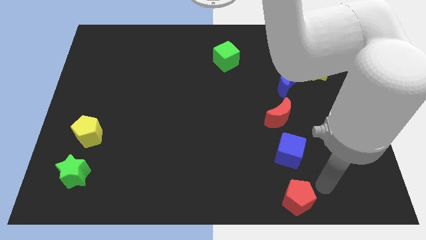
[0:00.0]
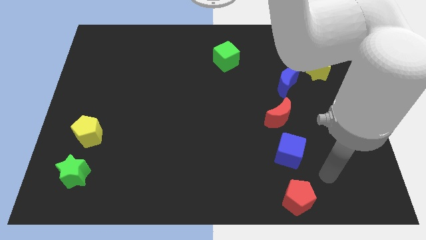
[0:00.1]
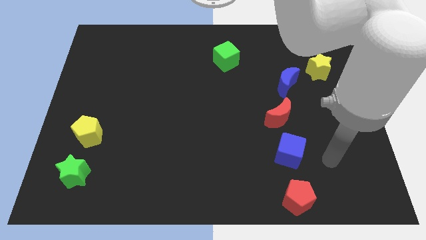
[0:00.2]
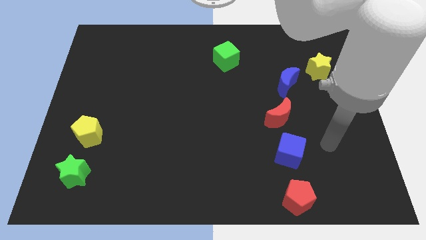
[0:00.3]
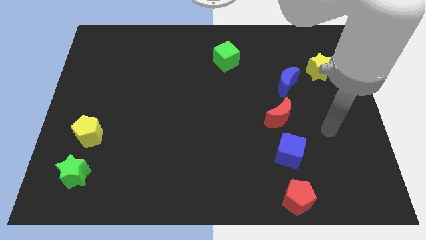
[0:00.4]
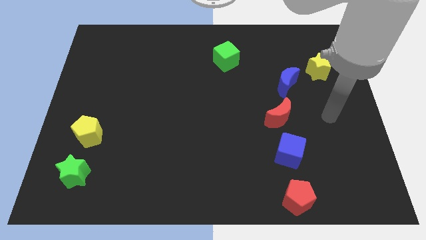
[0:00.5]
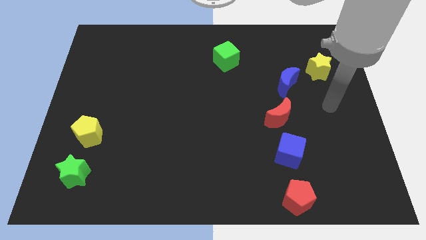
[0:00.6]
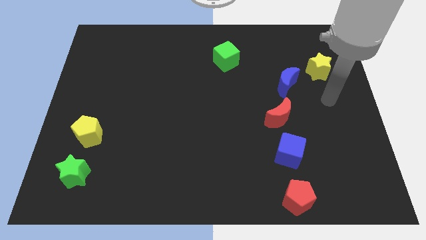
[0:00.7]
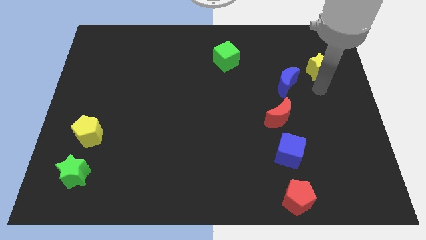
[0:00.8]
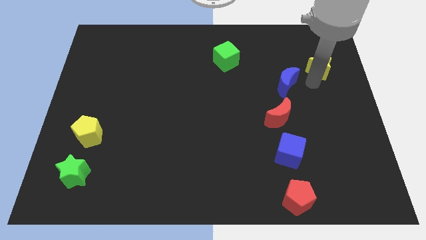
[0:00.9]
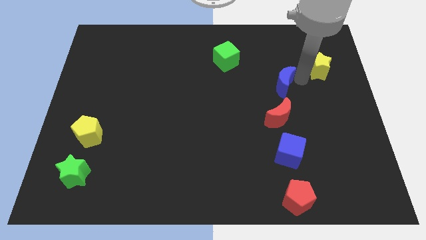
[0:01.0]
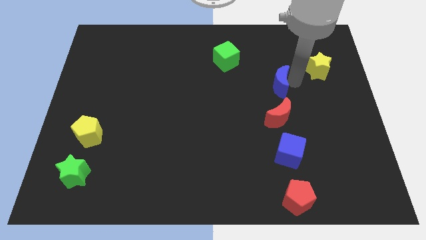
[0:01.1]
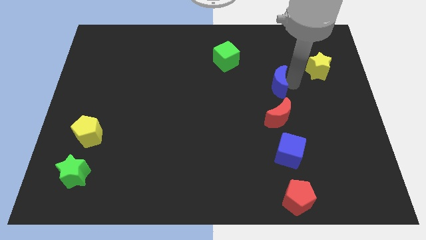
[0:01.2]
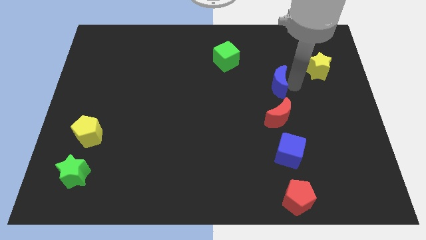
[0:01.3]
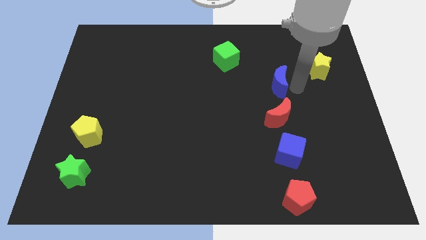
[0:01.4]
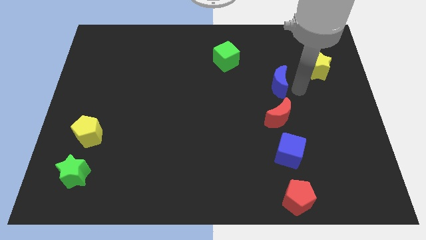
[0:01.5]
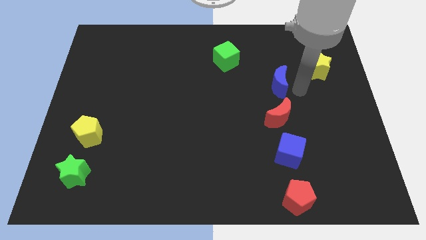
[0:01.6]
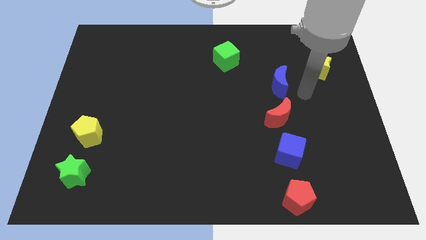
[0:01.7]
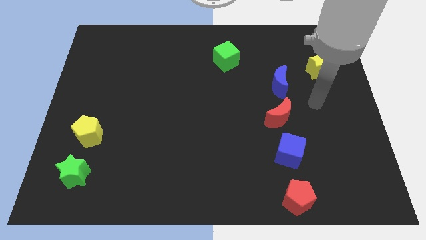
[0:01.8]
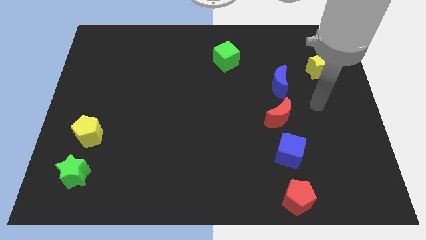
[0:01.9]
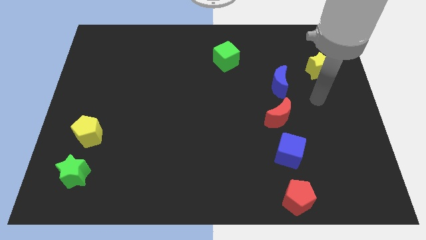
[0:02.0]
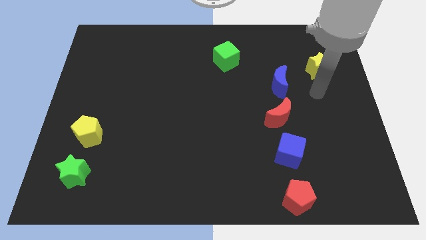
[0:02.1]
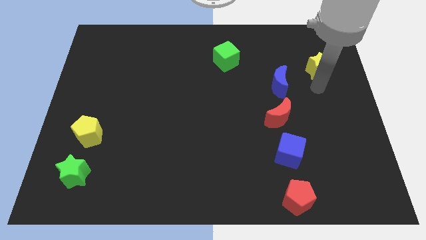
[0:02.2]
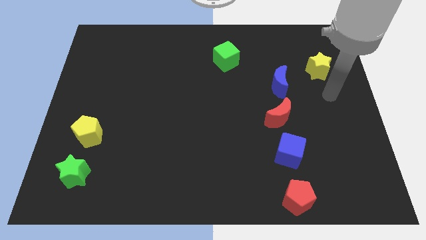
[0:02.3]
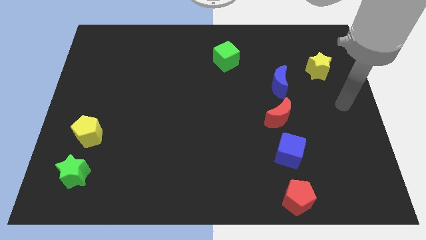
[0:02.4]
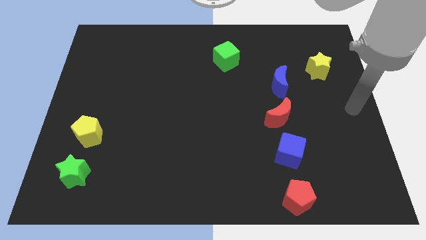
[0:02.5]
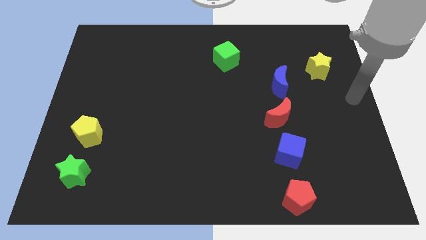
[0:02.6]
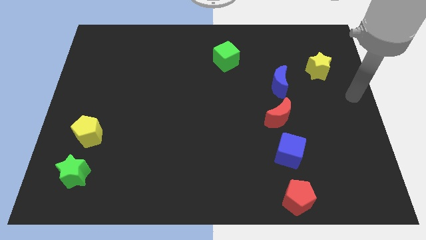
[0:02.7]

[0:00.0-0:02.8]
move the blue crescent slightly left on the top of the red crescent

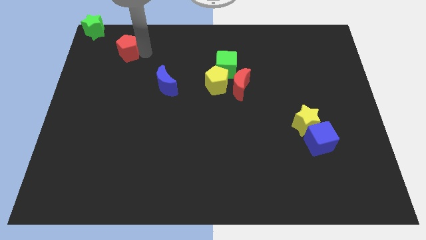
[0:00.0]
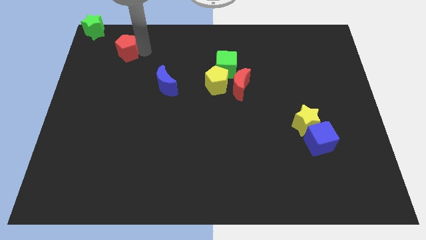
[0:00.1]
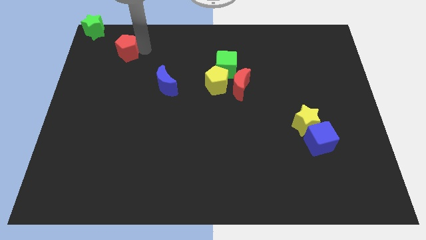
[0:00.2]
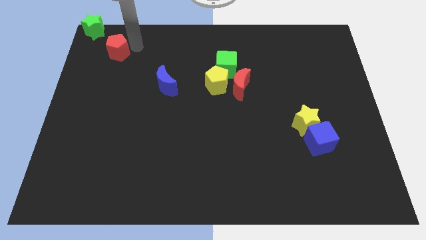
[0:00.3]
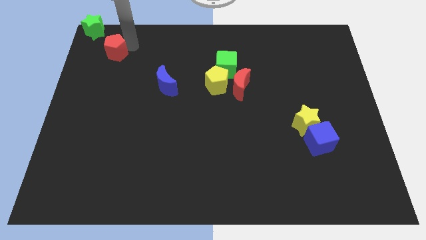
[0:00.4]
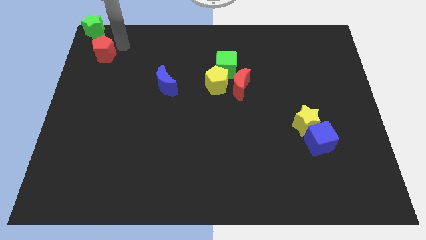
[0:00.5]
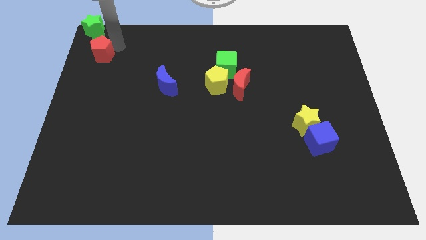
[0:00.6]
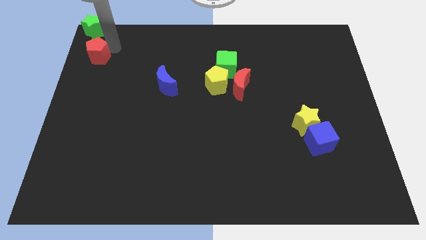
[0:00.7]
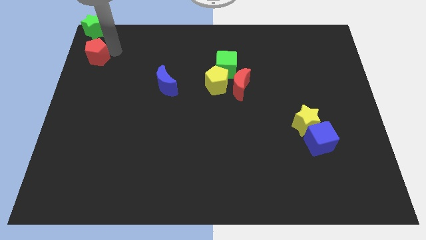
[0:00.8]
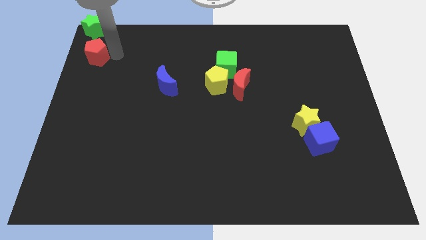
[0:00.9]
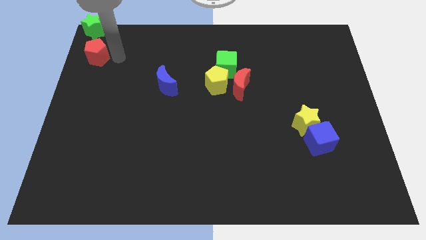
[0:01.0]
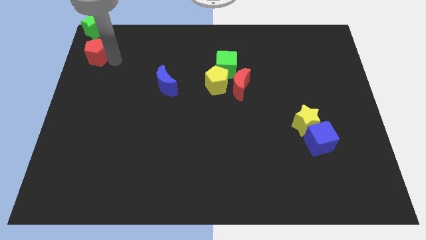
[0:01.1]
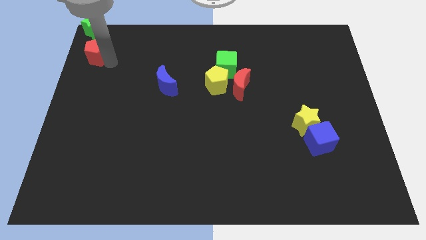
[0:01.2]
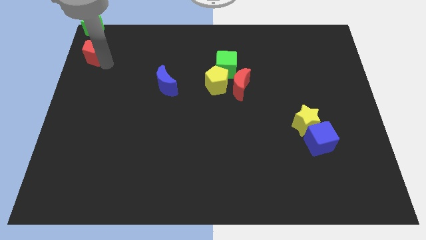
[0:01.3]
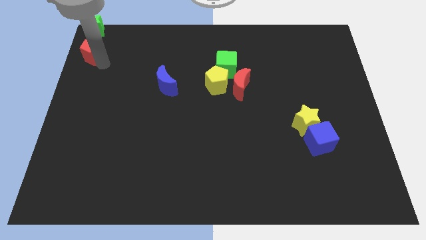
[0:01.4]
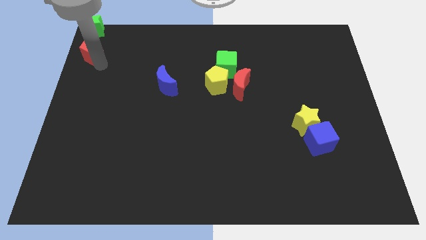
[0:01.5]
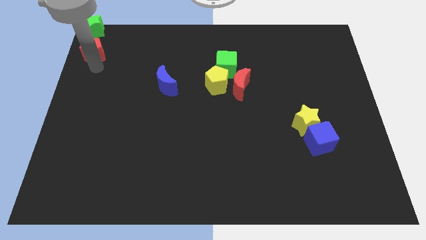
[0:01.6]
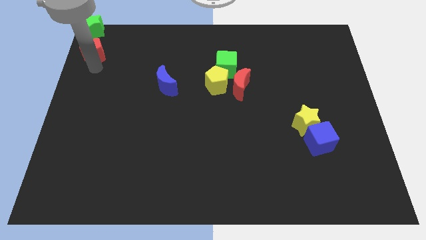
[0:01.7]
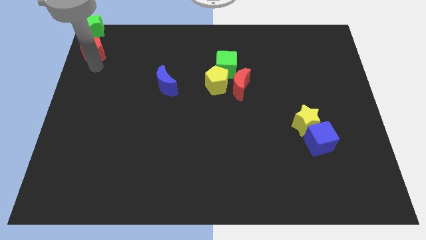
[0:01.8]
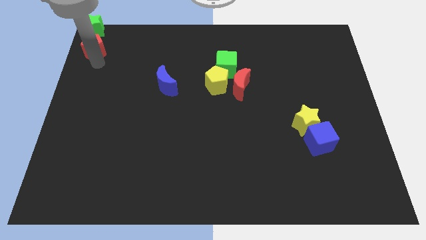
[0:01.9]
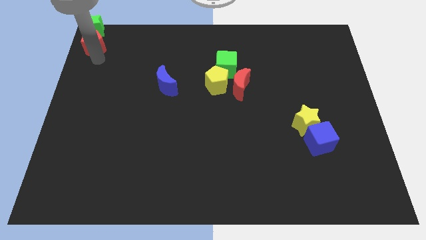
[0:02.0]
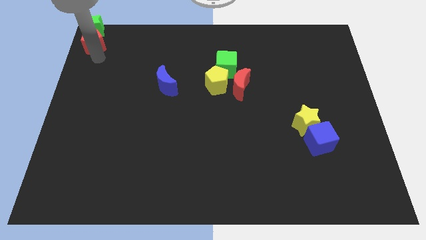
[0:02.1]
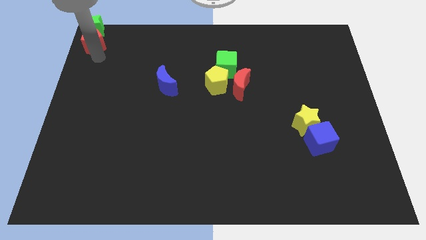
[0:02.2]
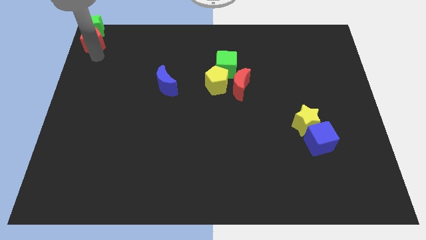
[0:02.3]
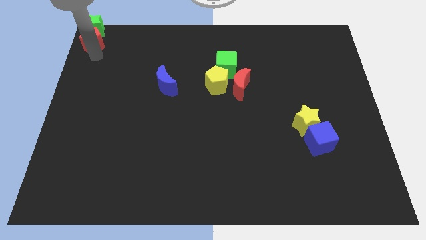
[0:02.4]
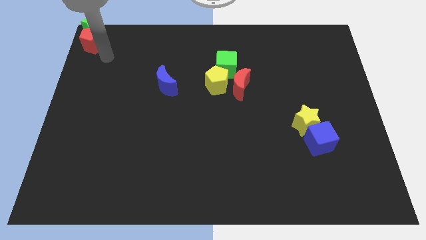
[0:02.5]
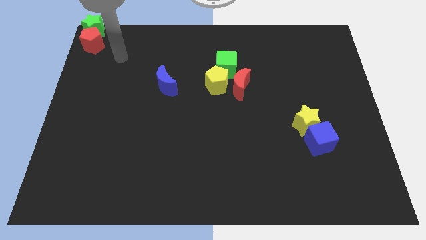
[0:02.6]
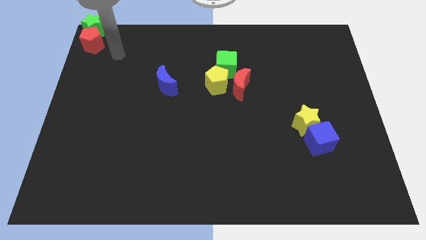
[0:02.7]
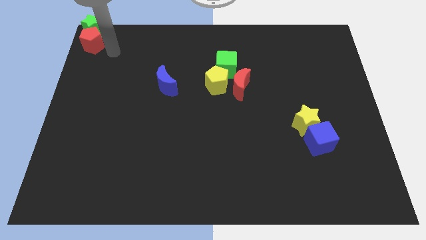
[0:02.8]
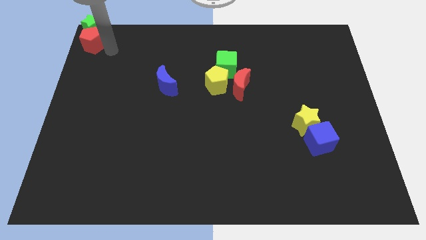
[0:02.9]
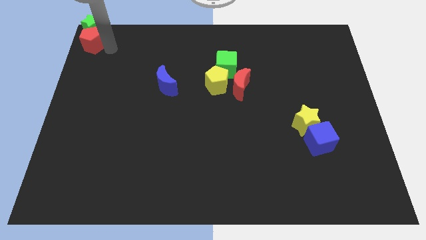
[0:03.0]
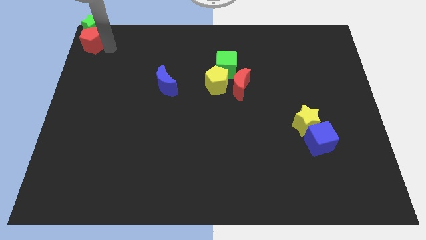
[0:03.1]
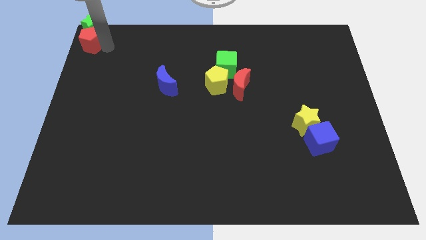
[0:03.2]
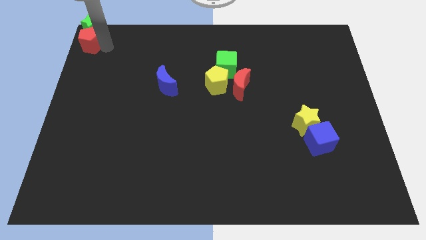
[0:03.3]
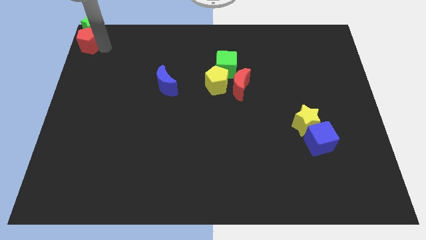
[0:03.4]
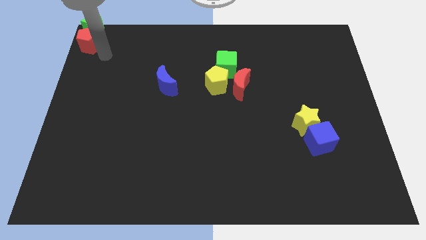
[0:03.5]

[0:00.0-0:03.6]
place the red pentagon below the green star

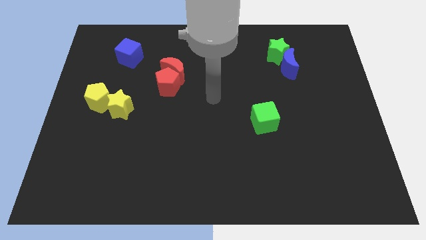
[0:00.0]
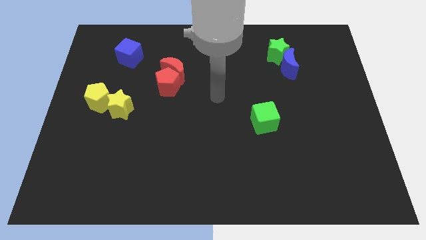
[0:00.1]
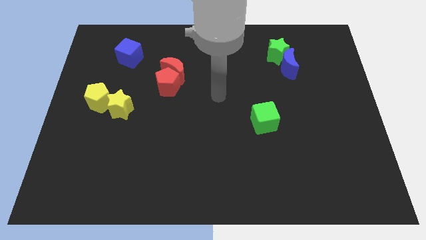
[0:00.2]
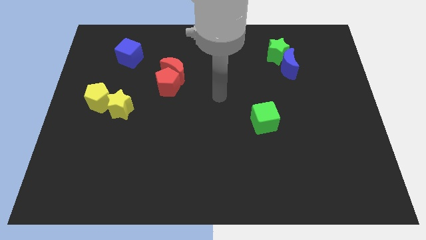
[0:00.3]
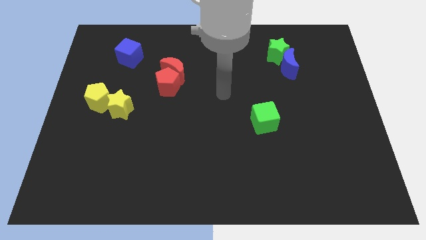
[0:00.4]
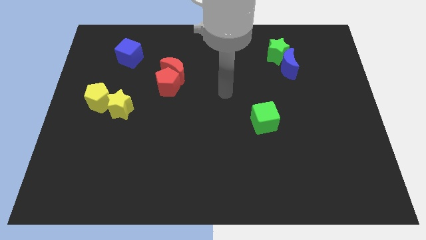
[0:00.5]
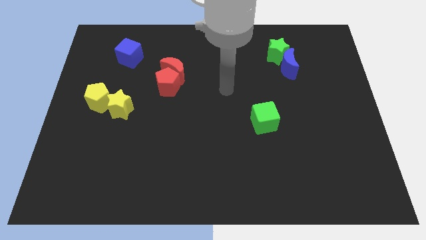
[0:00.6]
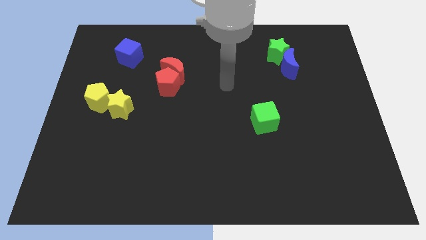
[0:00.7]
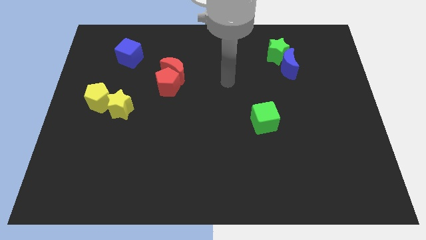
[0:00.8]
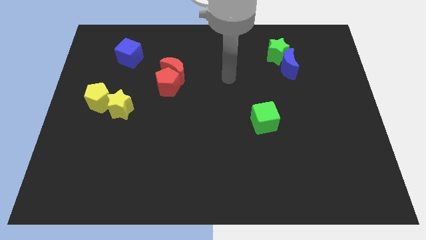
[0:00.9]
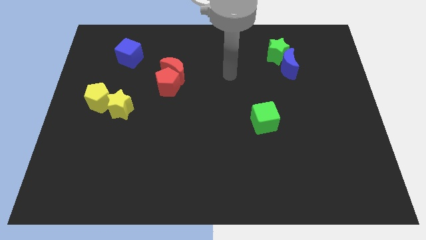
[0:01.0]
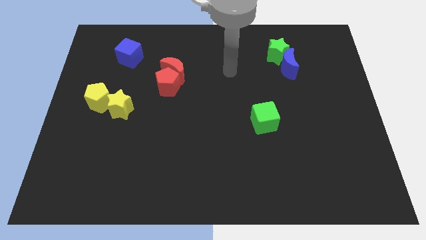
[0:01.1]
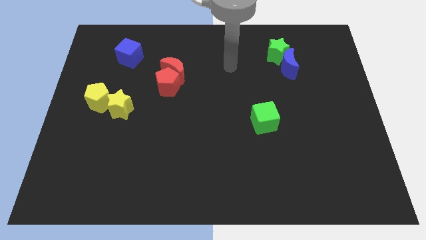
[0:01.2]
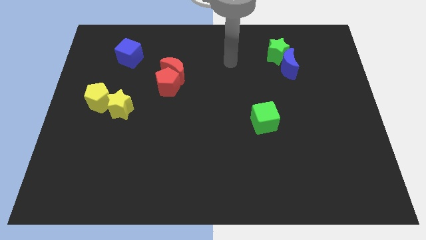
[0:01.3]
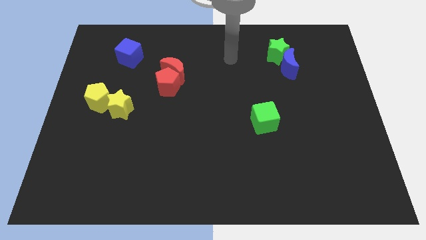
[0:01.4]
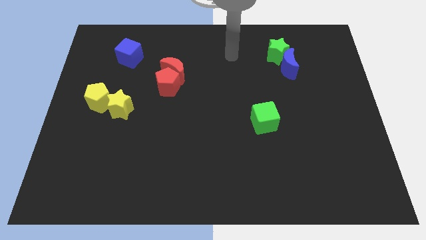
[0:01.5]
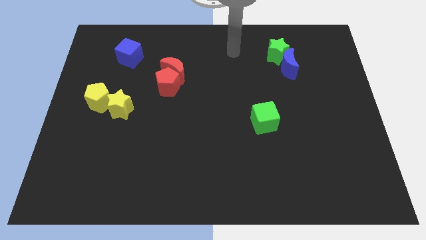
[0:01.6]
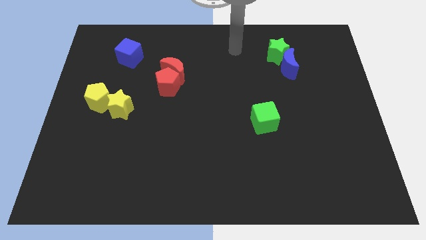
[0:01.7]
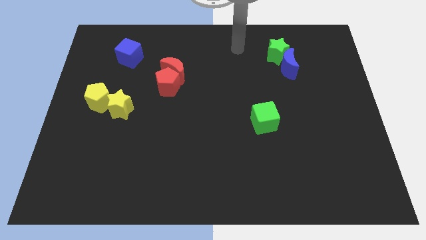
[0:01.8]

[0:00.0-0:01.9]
move your arm to the top center of the board

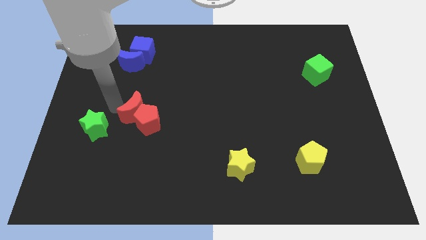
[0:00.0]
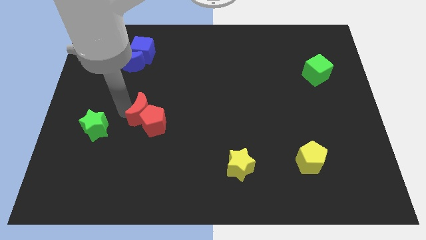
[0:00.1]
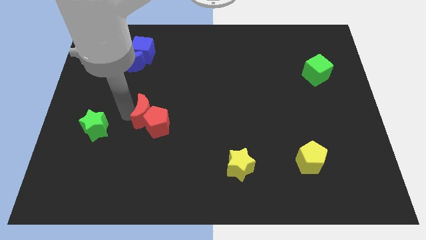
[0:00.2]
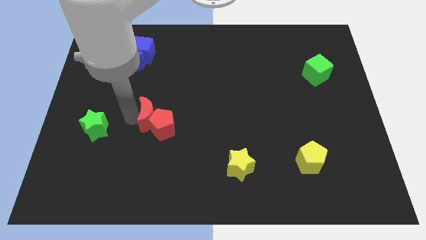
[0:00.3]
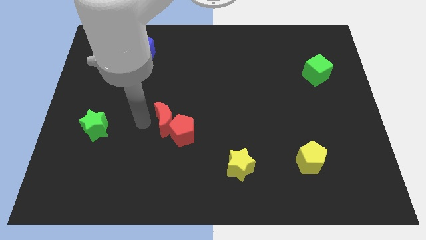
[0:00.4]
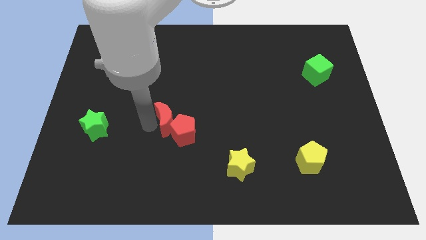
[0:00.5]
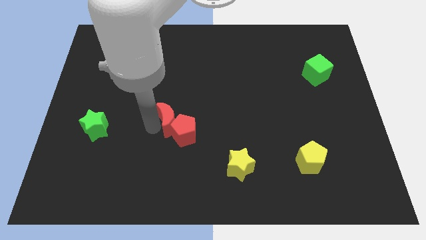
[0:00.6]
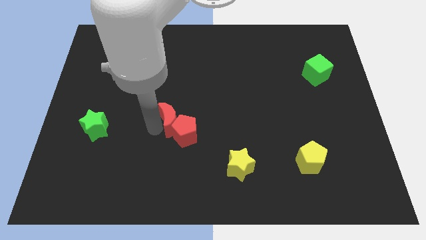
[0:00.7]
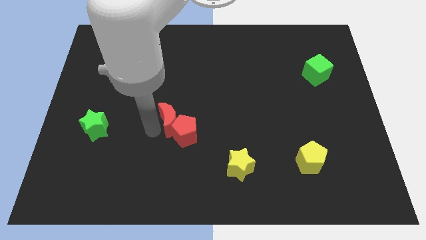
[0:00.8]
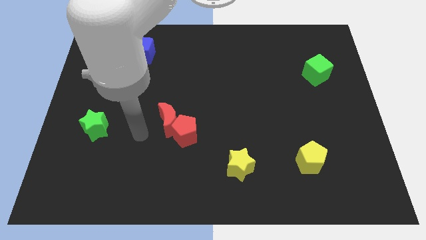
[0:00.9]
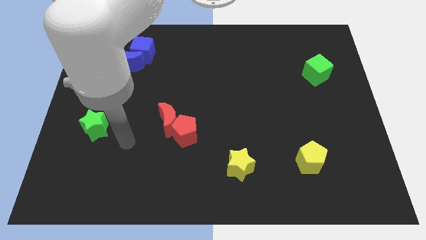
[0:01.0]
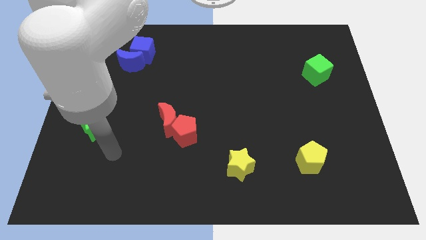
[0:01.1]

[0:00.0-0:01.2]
move both red crescent and red pentagon to the center of the board
